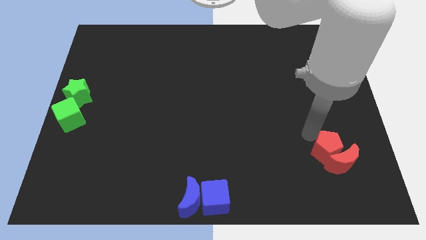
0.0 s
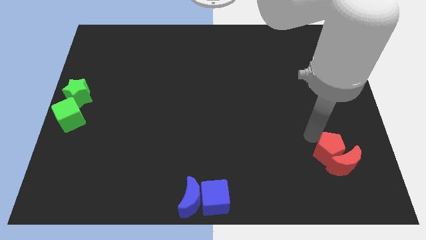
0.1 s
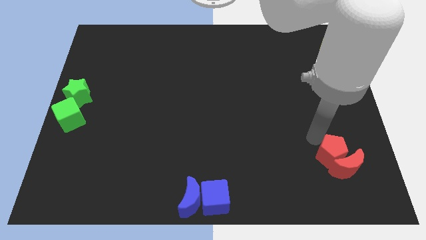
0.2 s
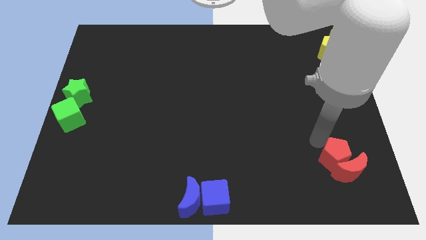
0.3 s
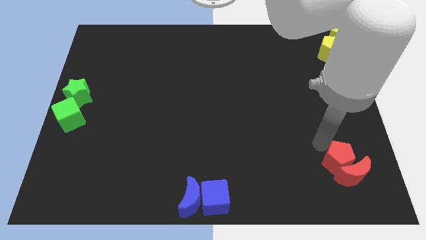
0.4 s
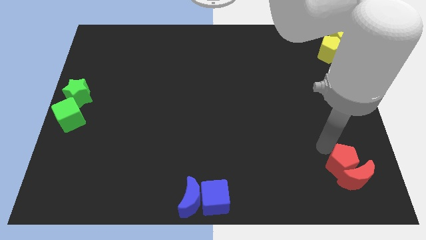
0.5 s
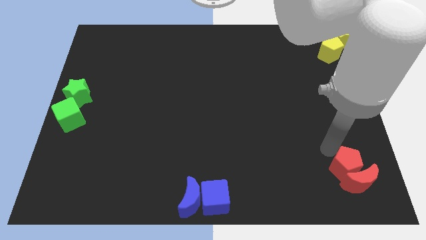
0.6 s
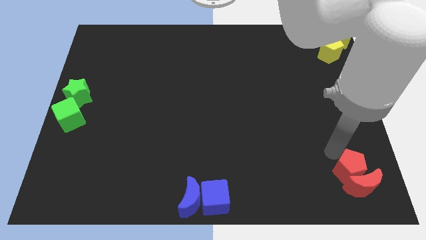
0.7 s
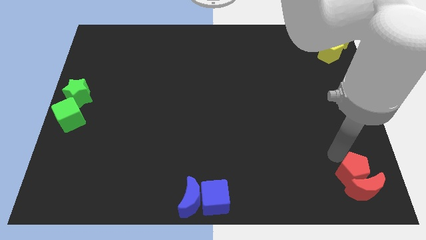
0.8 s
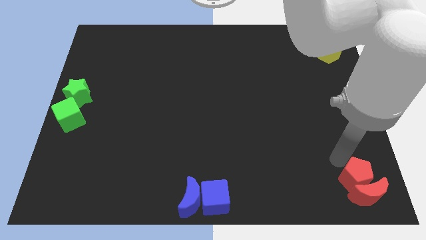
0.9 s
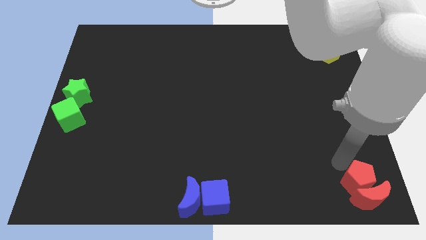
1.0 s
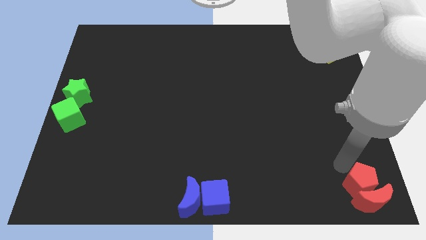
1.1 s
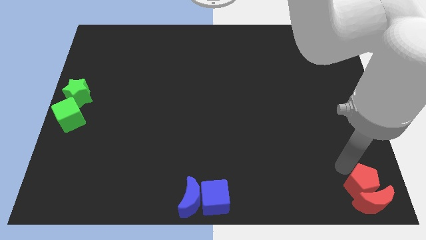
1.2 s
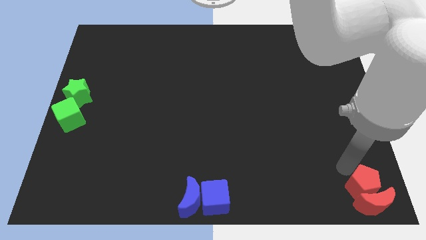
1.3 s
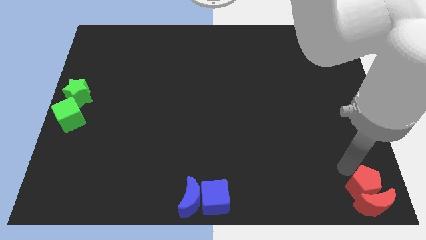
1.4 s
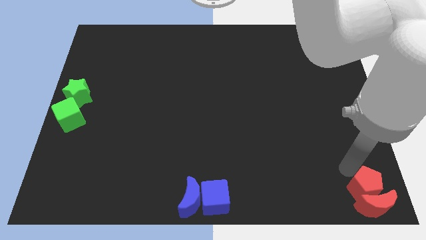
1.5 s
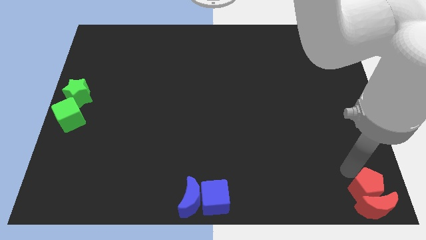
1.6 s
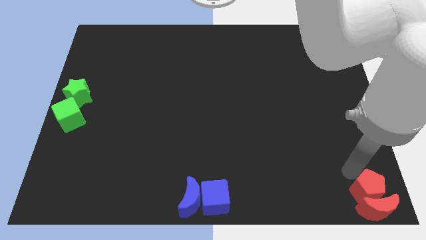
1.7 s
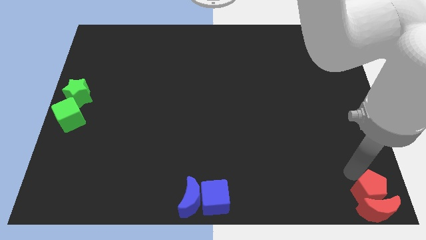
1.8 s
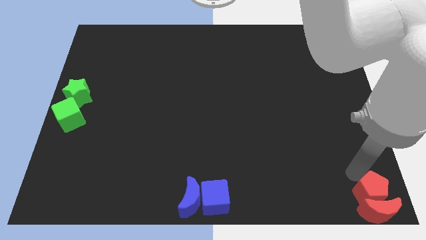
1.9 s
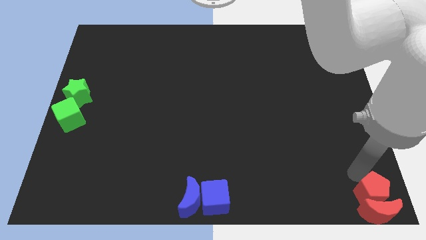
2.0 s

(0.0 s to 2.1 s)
move the red pentagon and the red moon to the bottom right corner of the board

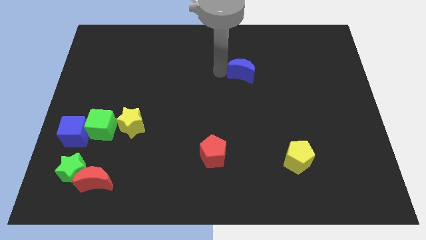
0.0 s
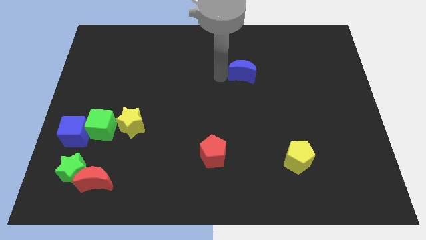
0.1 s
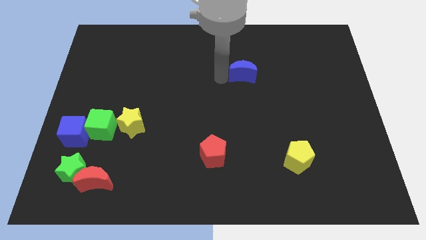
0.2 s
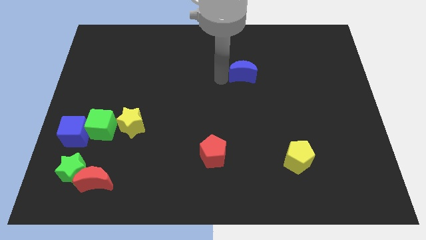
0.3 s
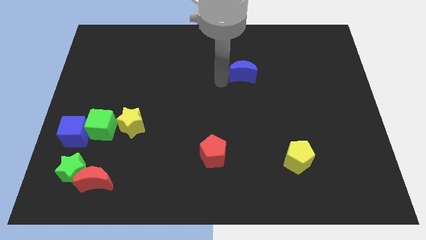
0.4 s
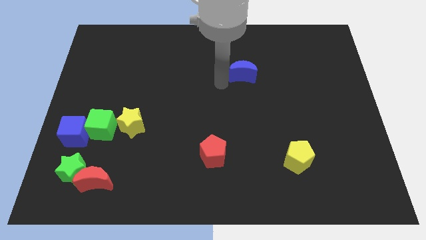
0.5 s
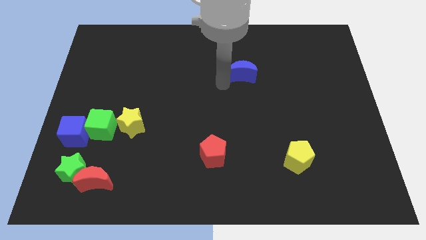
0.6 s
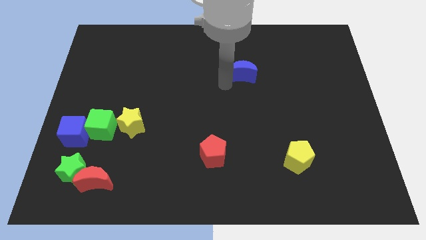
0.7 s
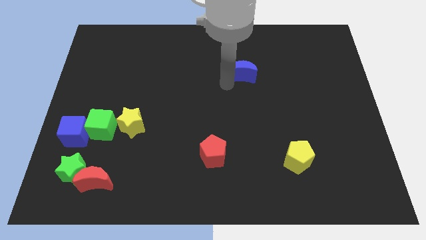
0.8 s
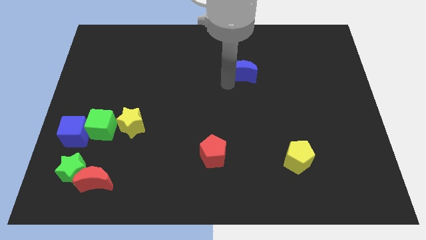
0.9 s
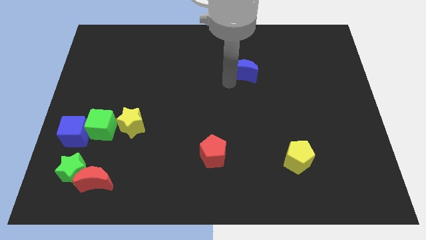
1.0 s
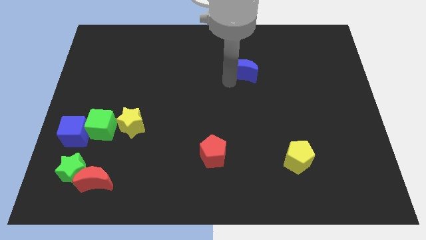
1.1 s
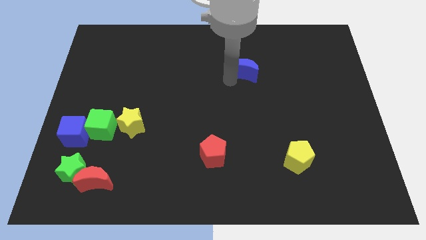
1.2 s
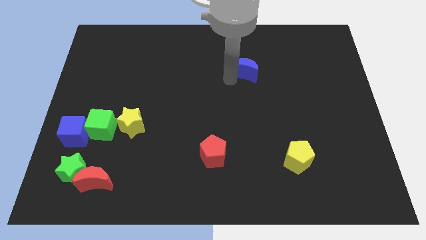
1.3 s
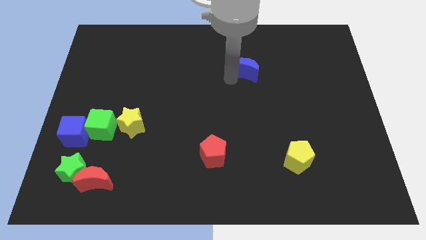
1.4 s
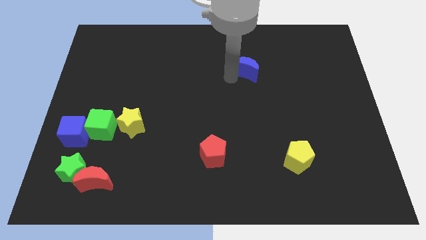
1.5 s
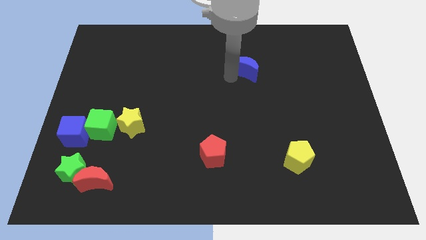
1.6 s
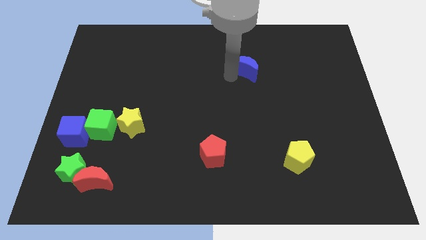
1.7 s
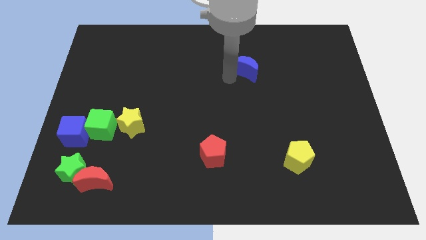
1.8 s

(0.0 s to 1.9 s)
push the blue crescent diagonally above the top right side of the red pentagon

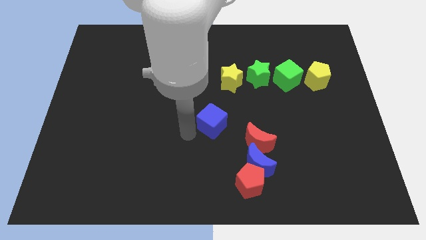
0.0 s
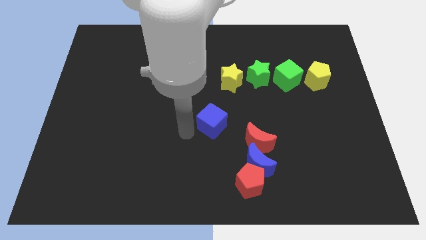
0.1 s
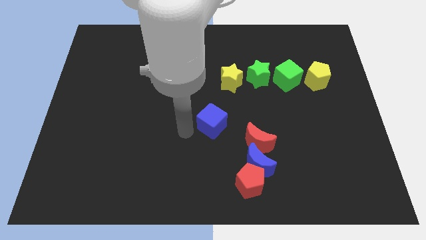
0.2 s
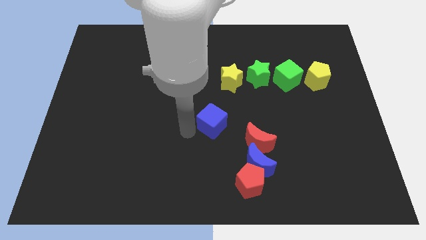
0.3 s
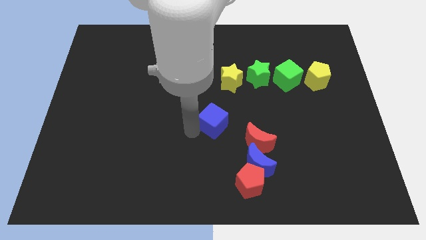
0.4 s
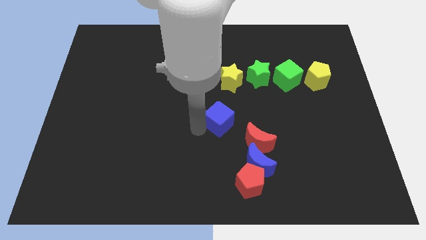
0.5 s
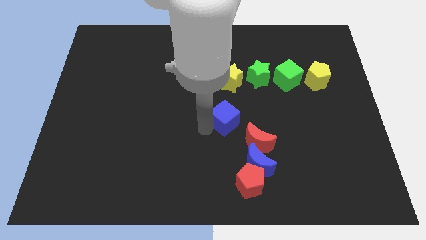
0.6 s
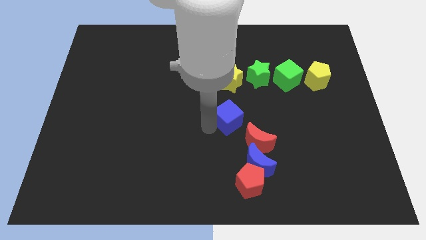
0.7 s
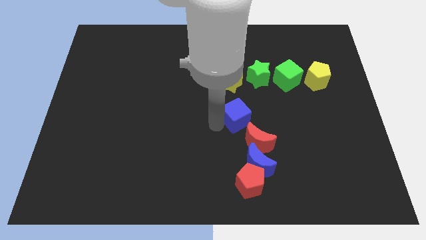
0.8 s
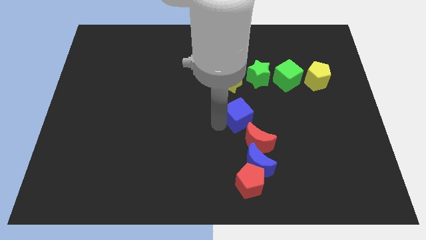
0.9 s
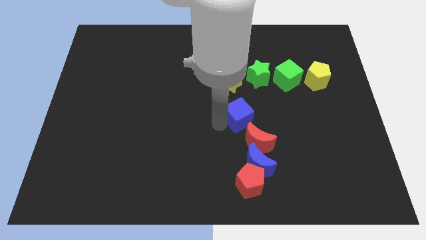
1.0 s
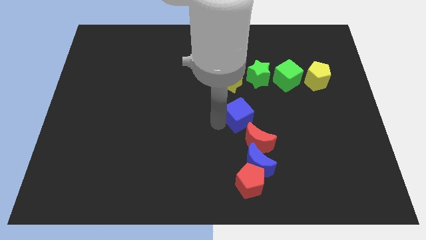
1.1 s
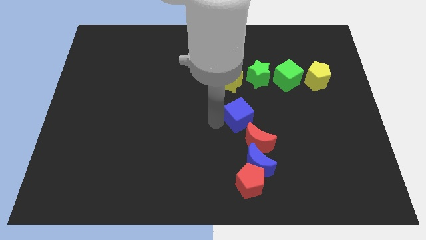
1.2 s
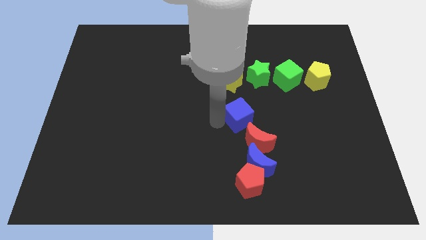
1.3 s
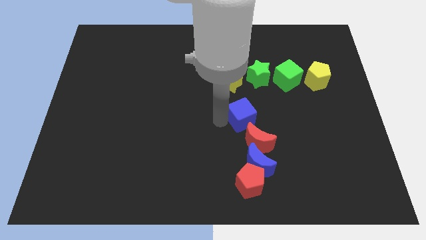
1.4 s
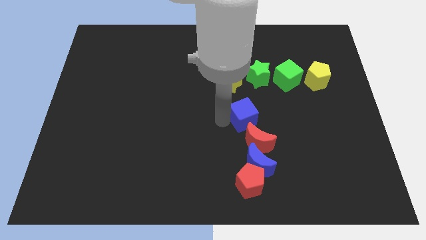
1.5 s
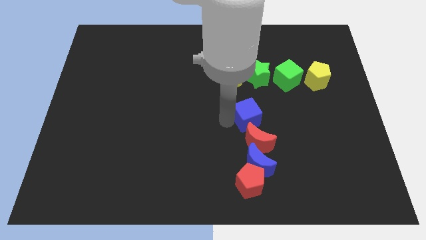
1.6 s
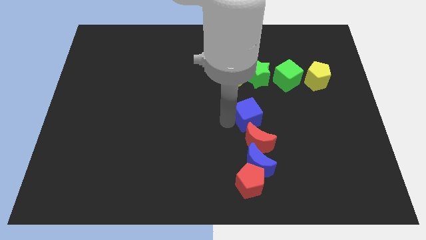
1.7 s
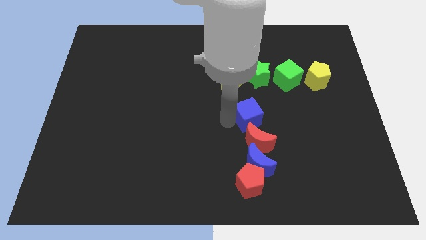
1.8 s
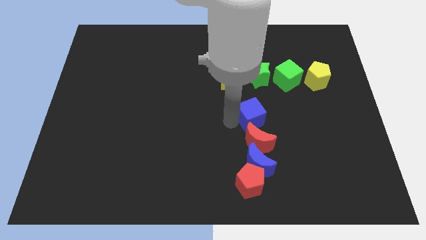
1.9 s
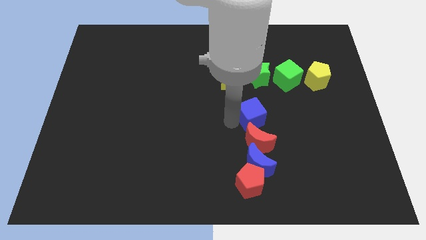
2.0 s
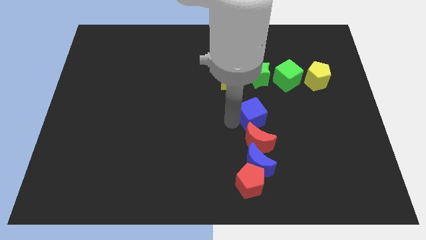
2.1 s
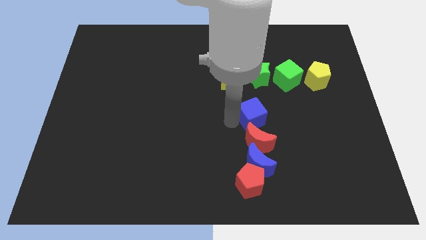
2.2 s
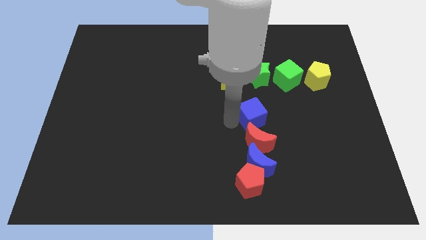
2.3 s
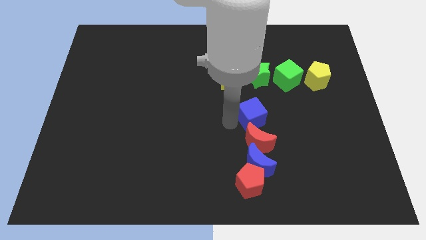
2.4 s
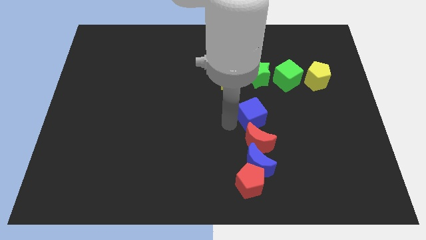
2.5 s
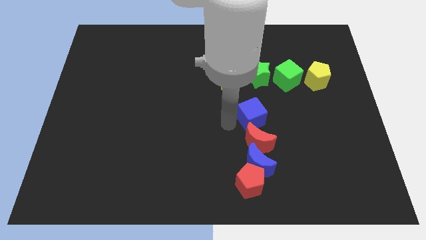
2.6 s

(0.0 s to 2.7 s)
slightly push the blue cube towards the bottom of red crescent

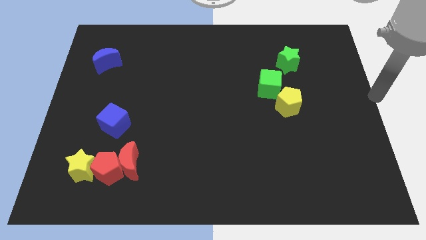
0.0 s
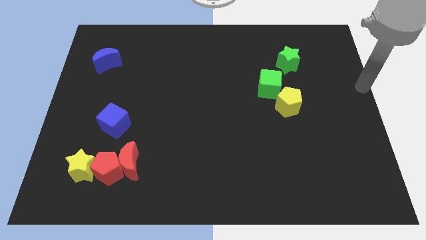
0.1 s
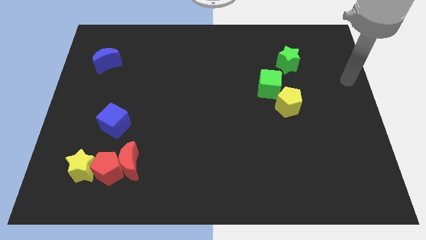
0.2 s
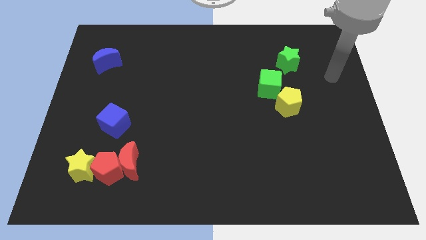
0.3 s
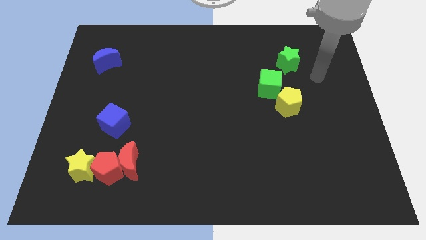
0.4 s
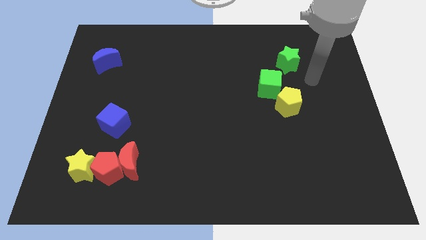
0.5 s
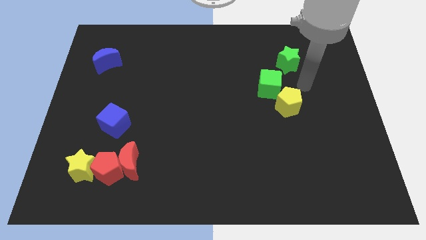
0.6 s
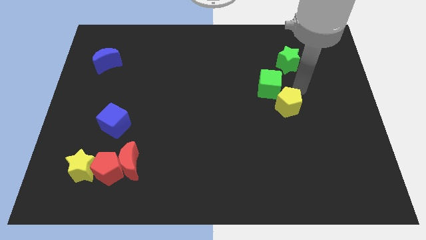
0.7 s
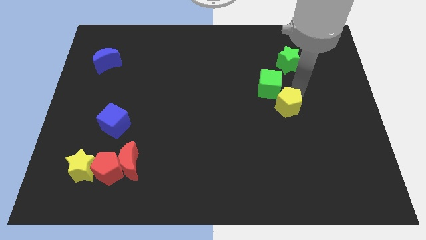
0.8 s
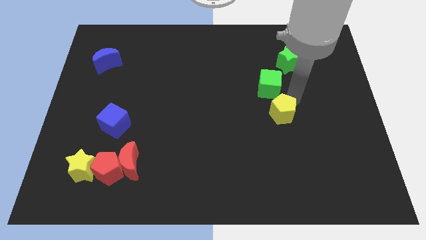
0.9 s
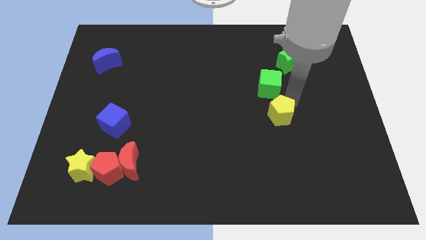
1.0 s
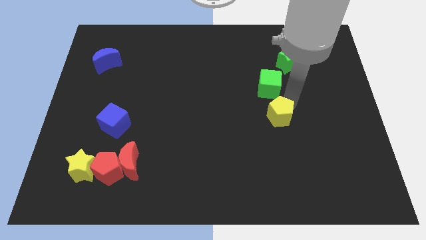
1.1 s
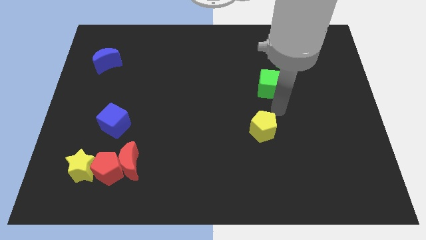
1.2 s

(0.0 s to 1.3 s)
push the yellow pentagon to the bottom of the green cube

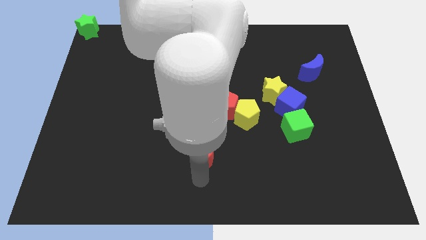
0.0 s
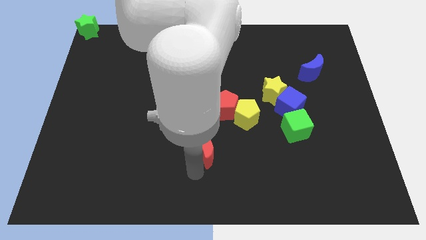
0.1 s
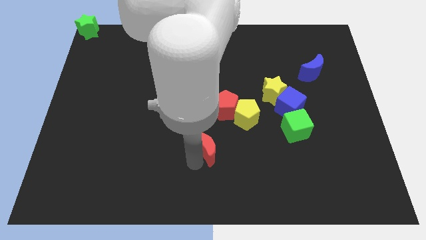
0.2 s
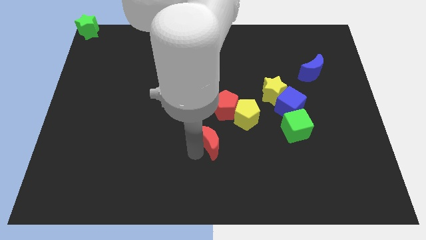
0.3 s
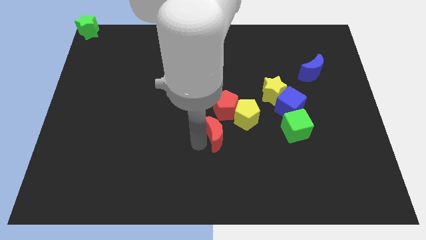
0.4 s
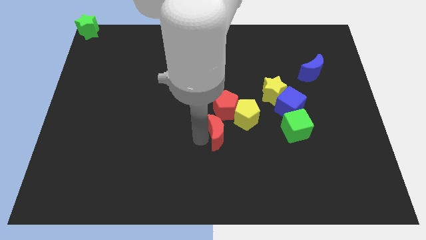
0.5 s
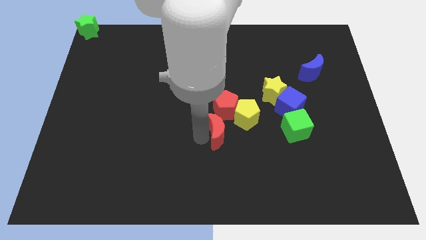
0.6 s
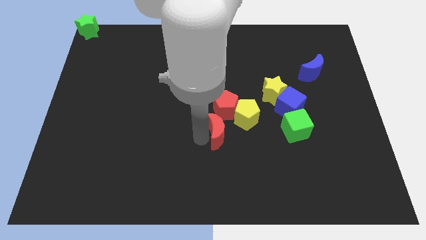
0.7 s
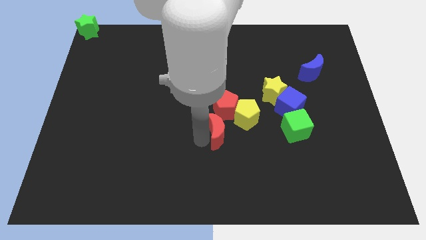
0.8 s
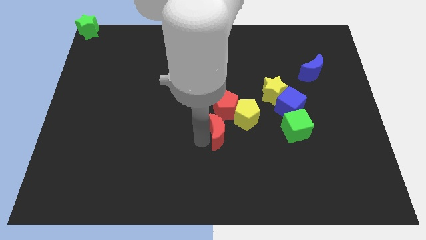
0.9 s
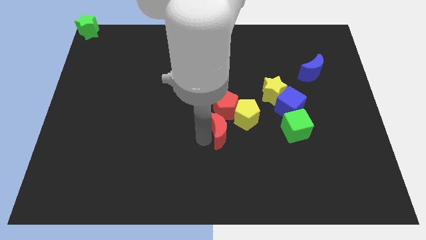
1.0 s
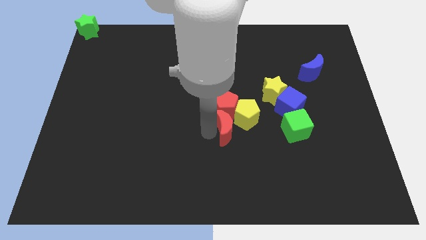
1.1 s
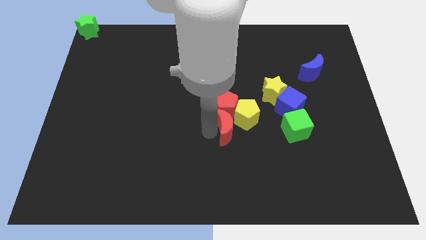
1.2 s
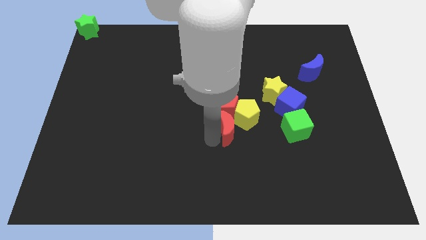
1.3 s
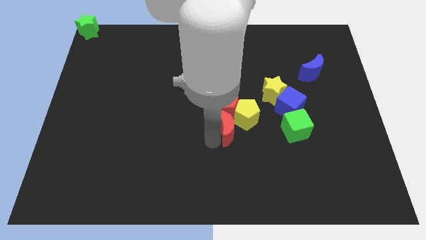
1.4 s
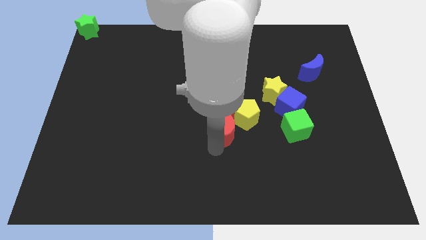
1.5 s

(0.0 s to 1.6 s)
place the red crescent below the red pentagon
